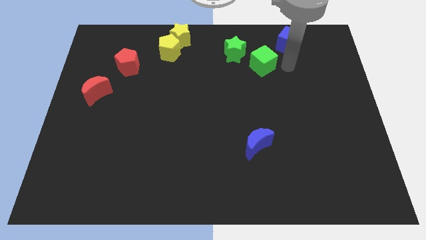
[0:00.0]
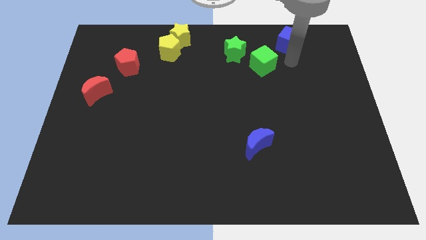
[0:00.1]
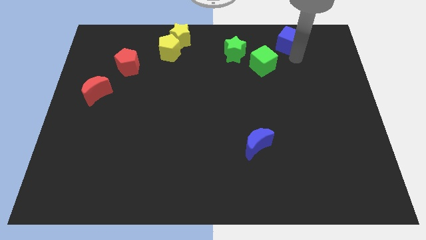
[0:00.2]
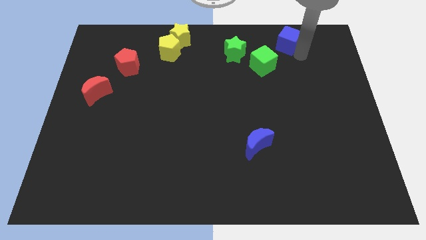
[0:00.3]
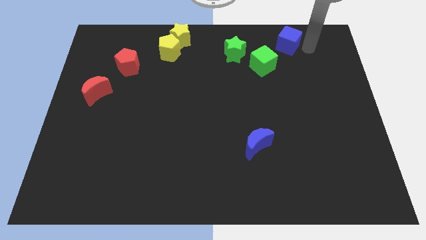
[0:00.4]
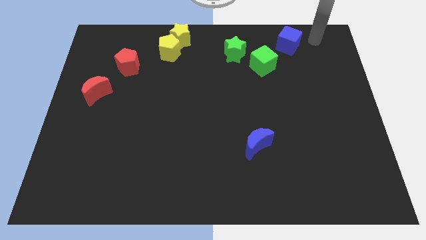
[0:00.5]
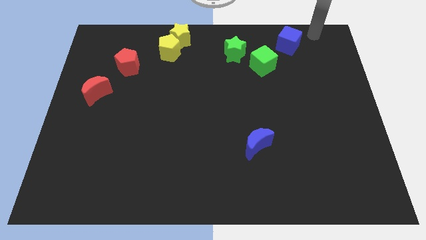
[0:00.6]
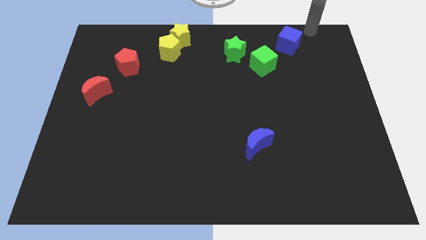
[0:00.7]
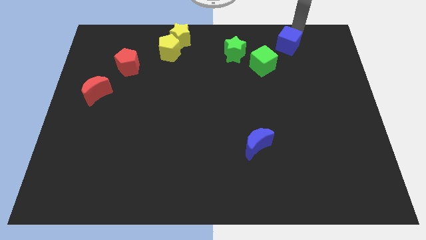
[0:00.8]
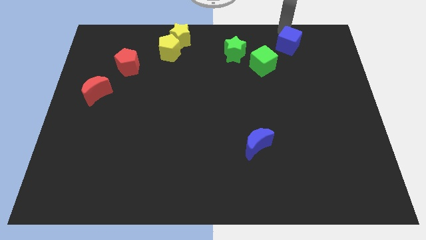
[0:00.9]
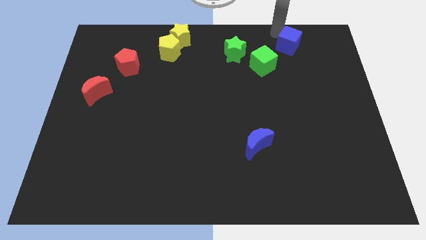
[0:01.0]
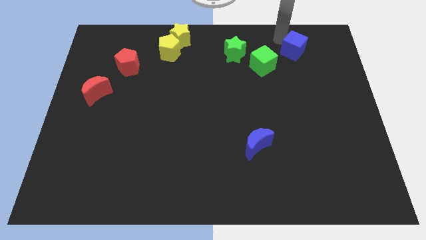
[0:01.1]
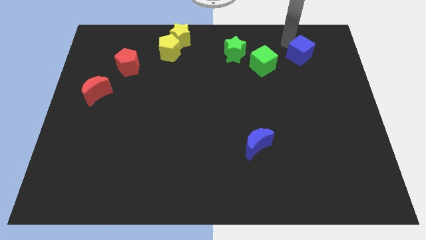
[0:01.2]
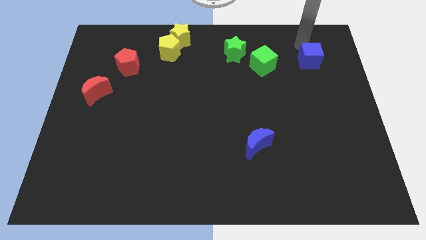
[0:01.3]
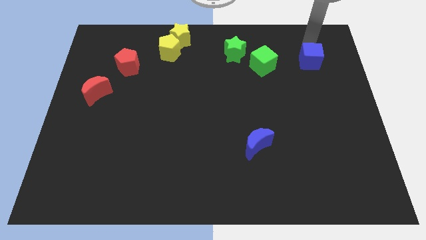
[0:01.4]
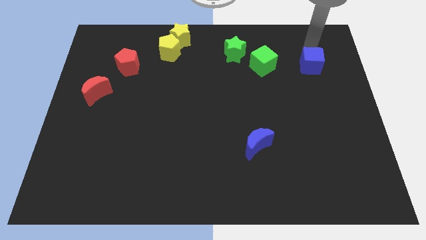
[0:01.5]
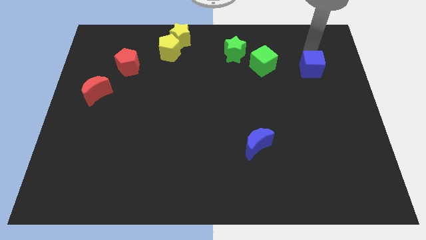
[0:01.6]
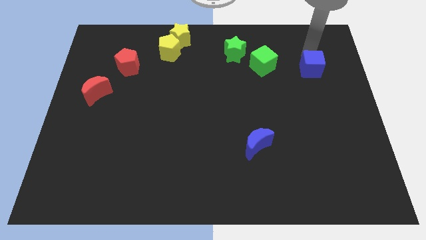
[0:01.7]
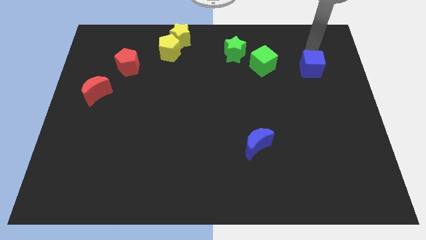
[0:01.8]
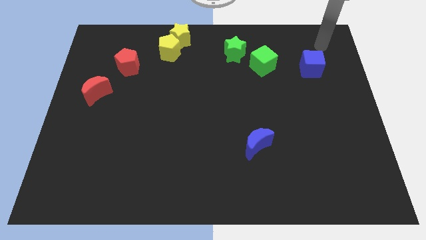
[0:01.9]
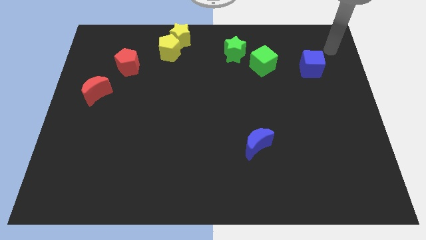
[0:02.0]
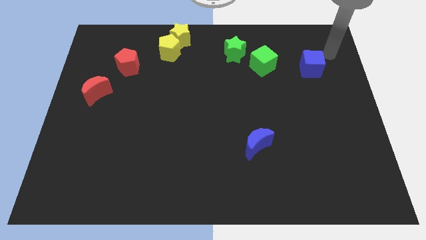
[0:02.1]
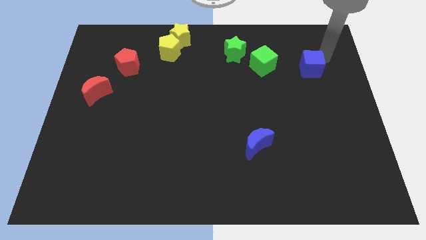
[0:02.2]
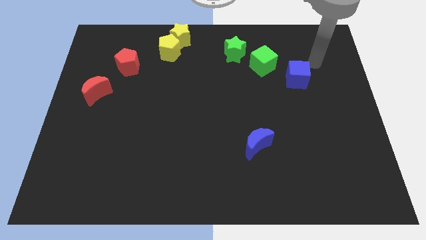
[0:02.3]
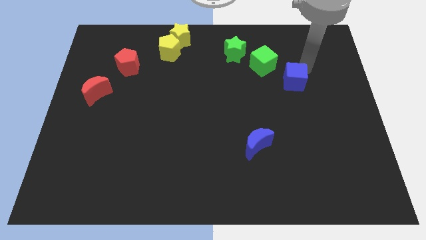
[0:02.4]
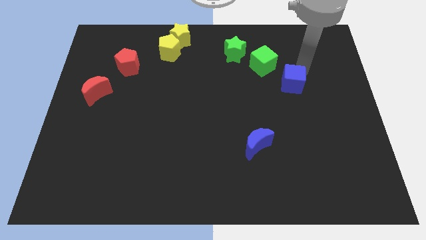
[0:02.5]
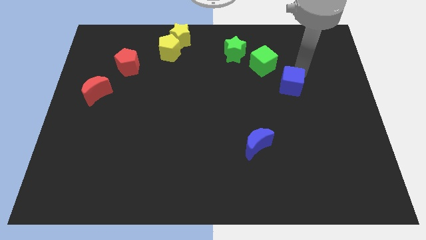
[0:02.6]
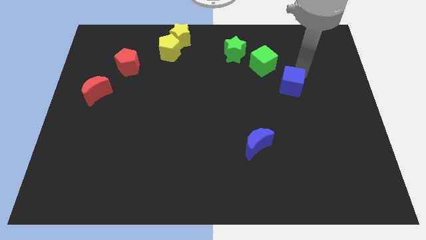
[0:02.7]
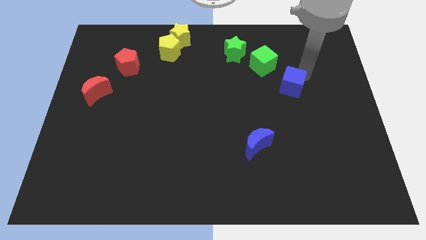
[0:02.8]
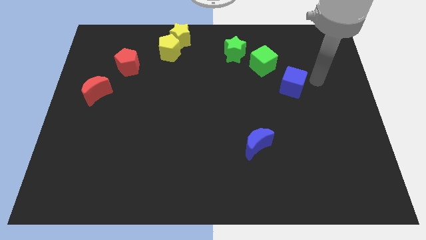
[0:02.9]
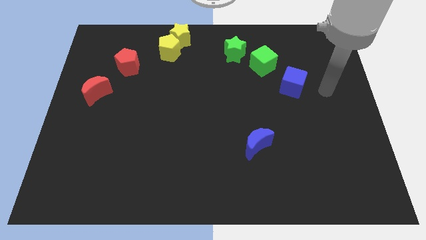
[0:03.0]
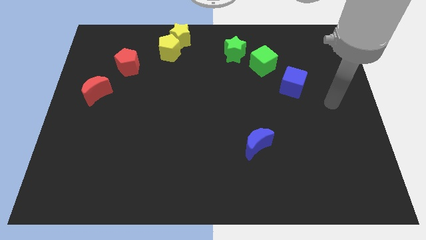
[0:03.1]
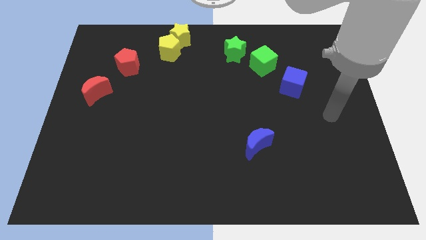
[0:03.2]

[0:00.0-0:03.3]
push the blue cube to the bottom right side of the green cube

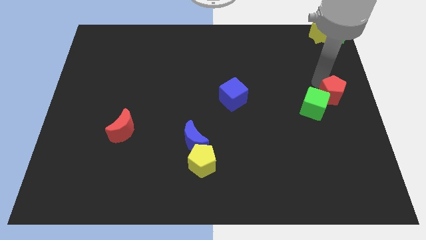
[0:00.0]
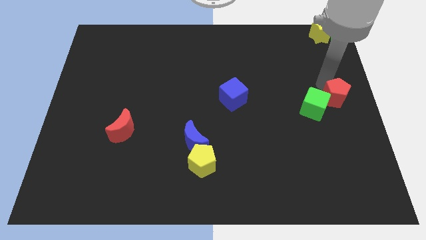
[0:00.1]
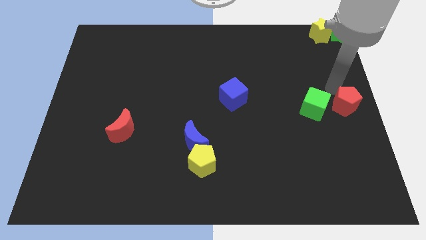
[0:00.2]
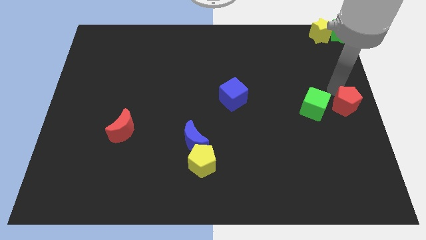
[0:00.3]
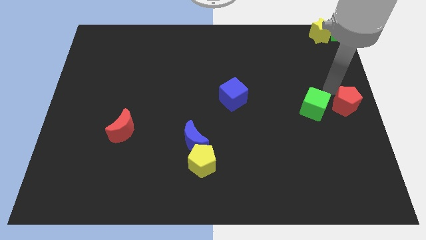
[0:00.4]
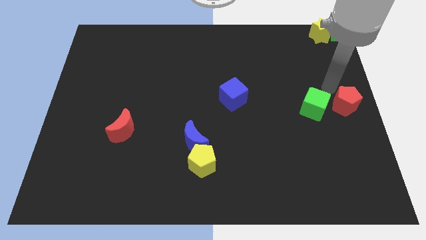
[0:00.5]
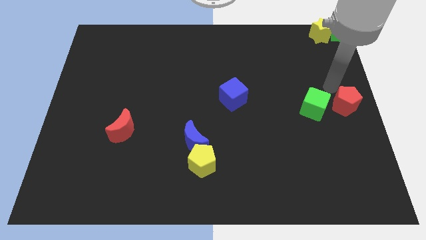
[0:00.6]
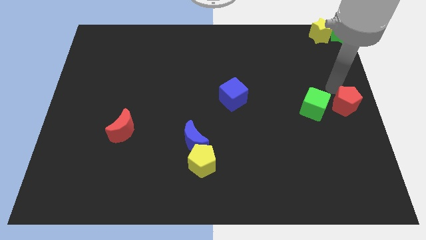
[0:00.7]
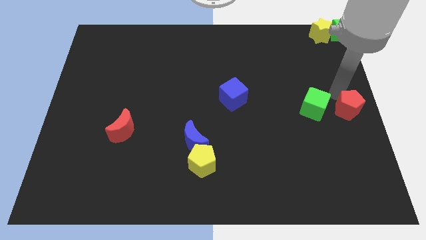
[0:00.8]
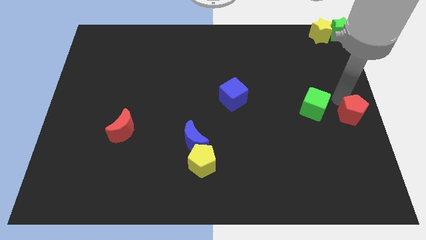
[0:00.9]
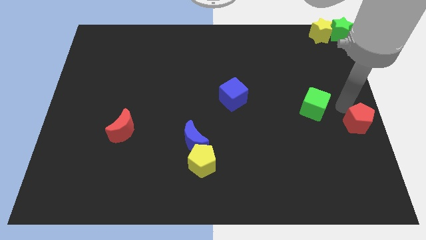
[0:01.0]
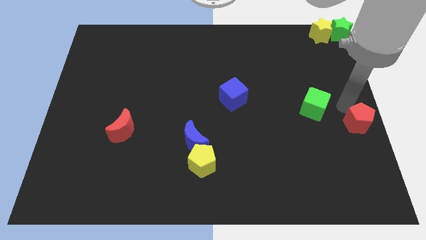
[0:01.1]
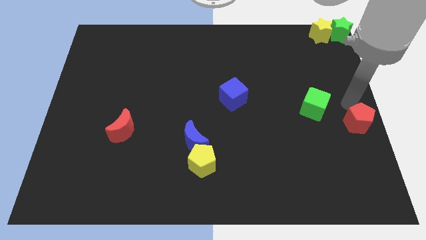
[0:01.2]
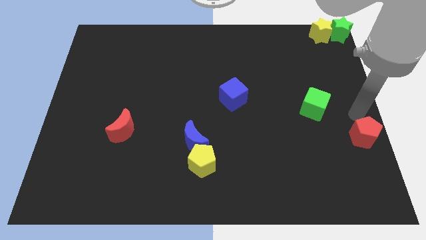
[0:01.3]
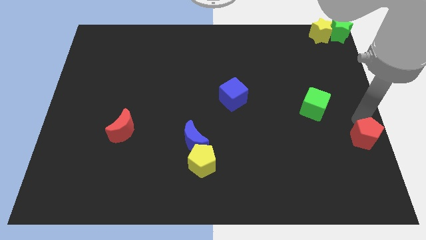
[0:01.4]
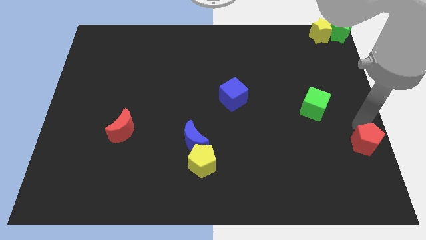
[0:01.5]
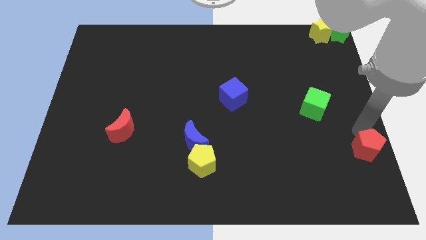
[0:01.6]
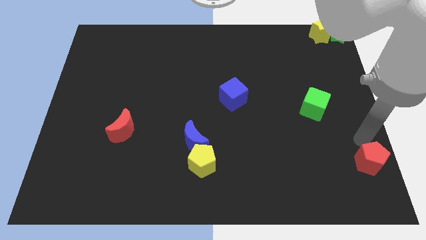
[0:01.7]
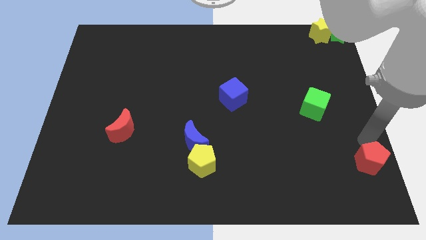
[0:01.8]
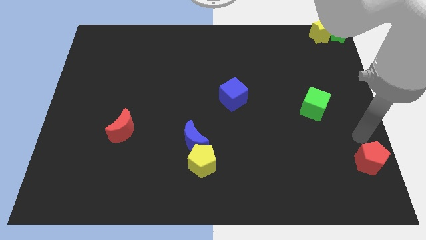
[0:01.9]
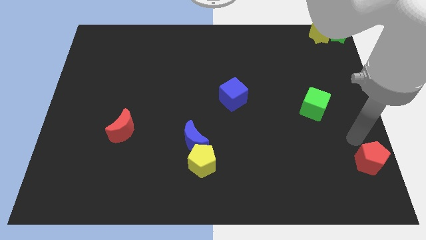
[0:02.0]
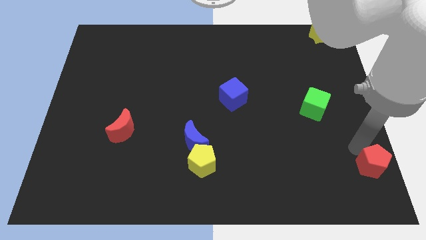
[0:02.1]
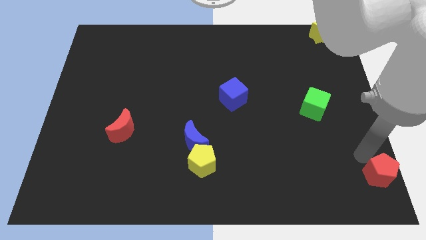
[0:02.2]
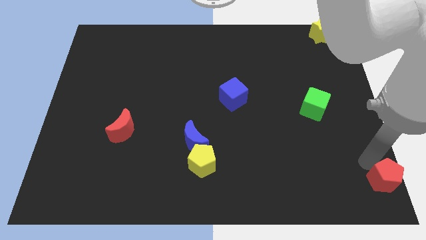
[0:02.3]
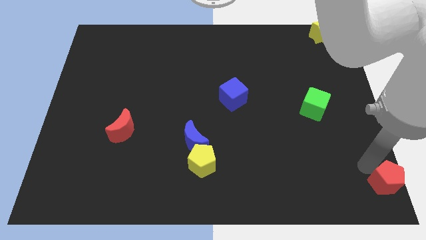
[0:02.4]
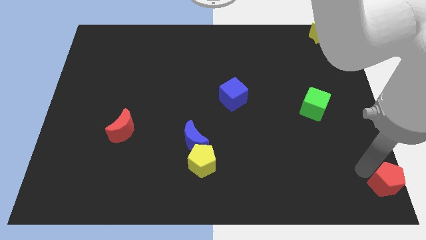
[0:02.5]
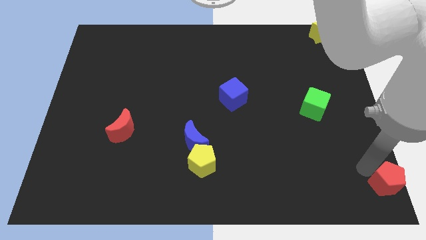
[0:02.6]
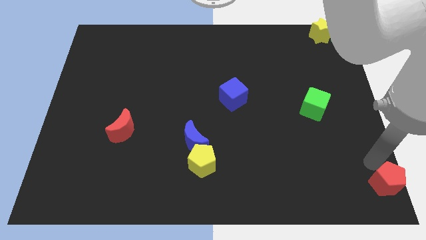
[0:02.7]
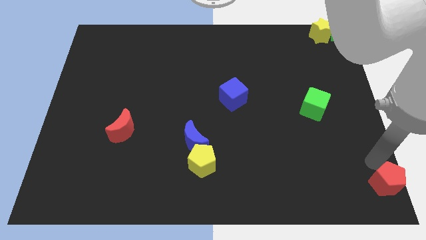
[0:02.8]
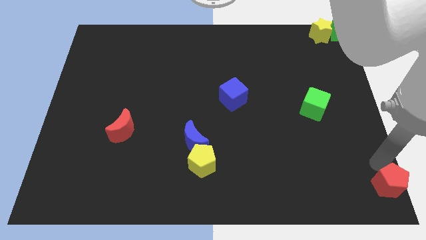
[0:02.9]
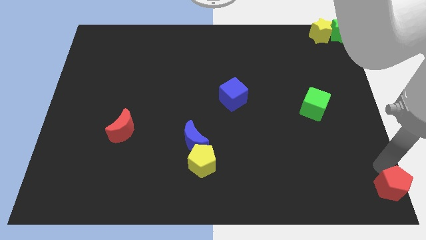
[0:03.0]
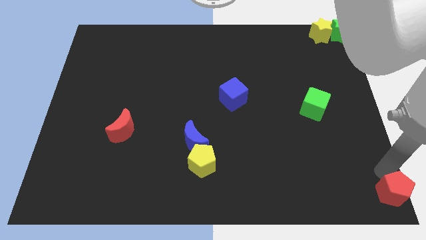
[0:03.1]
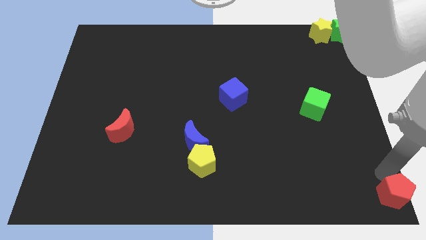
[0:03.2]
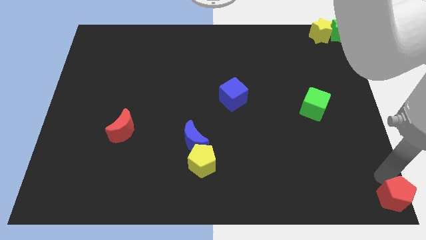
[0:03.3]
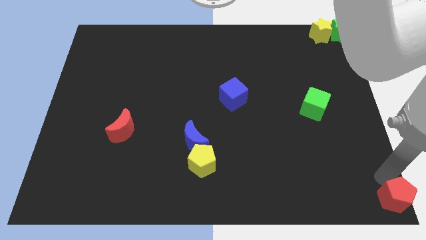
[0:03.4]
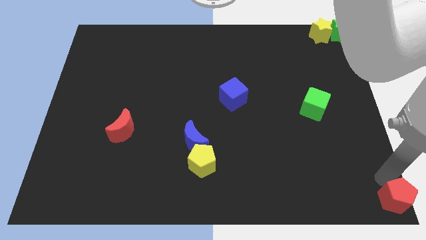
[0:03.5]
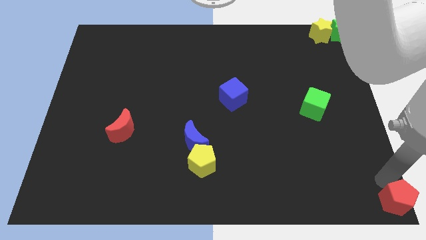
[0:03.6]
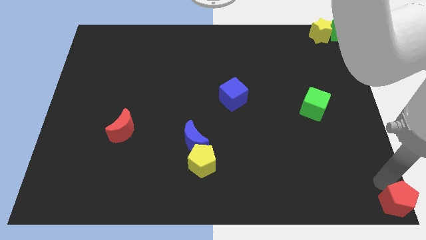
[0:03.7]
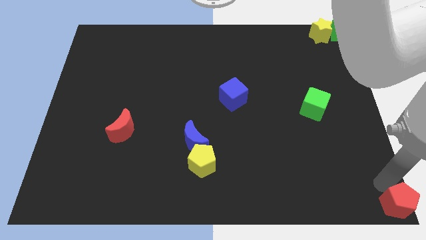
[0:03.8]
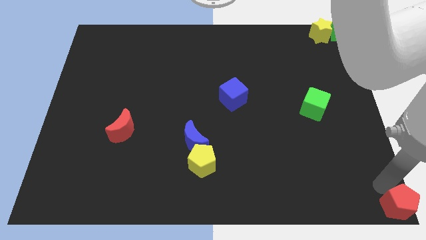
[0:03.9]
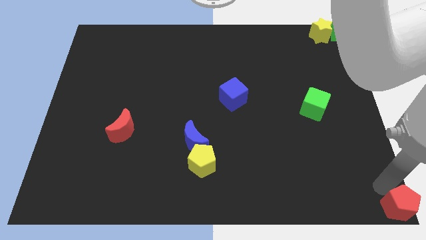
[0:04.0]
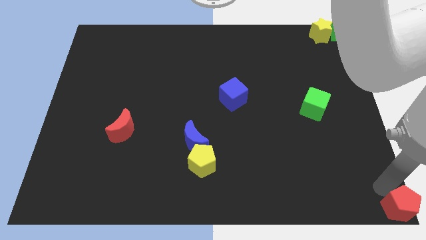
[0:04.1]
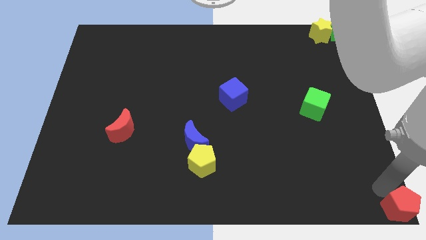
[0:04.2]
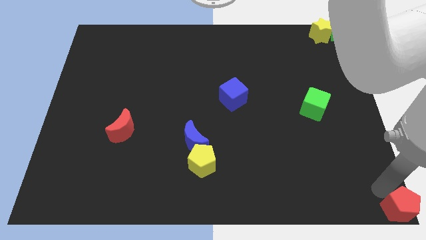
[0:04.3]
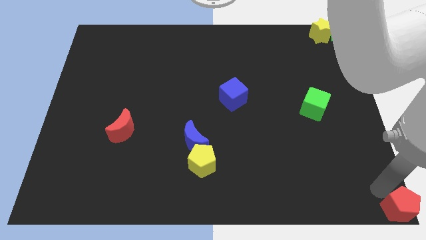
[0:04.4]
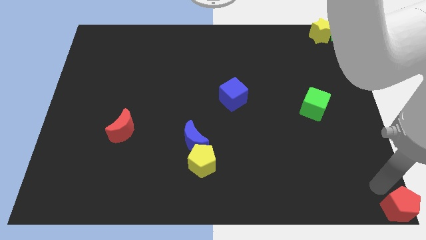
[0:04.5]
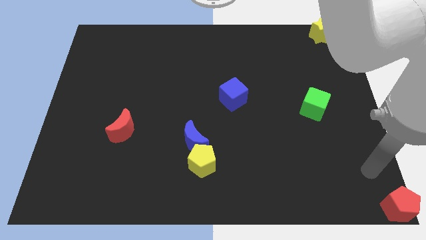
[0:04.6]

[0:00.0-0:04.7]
place the red pentagon at the bottom right corner of the board

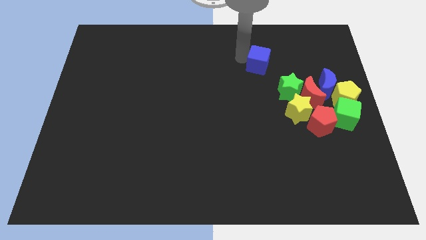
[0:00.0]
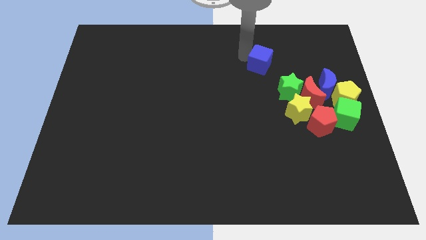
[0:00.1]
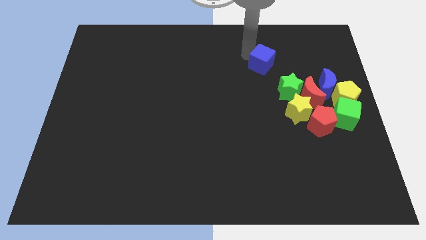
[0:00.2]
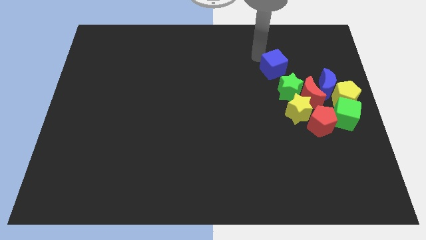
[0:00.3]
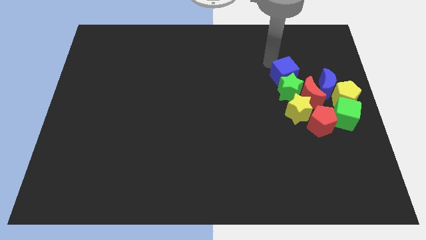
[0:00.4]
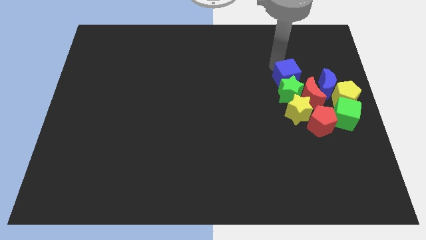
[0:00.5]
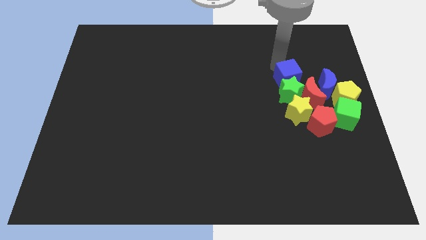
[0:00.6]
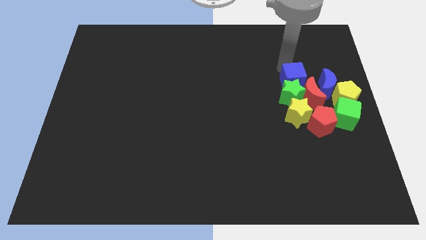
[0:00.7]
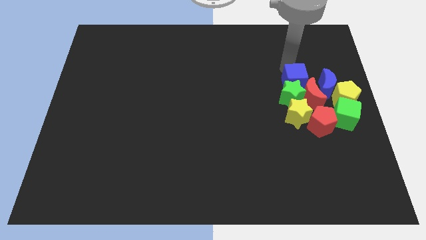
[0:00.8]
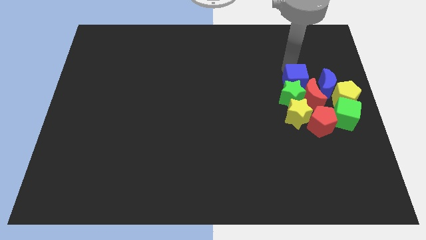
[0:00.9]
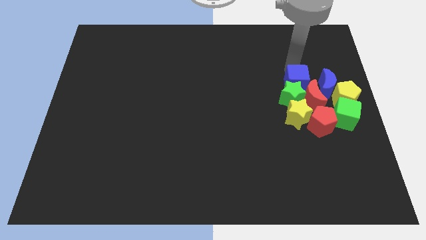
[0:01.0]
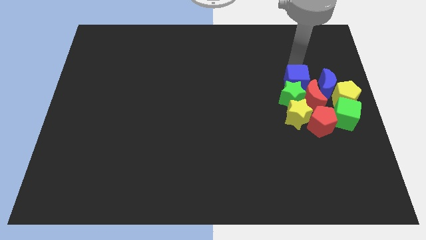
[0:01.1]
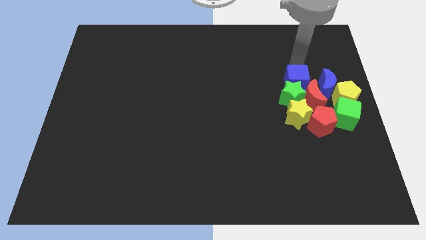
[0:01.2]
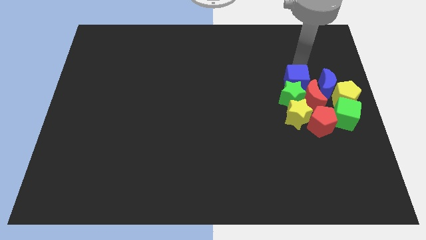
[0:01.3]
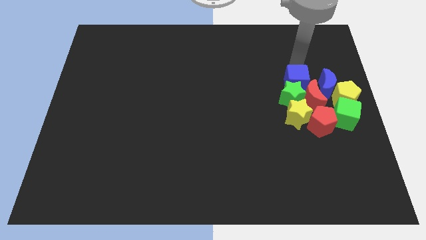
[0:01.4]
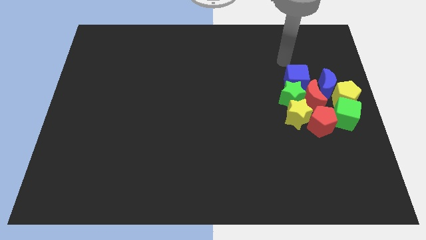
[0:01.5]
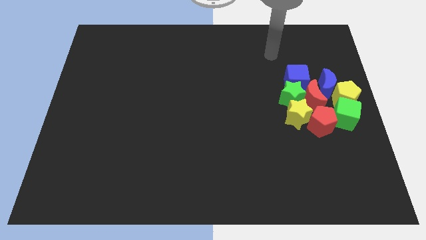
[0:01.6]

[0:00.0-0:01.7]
push the blue cube into the group of blocks
